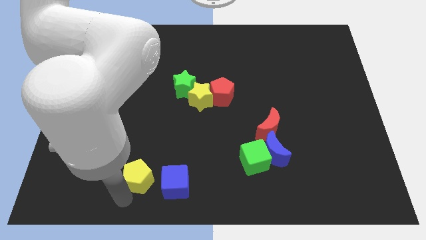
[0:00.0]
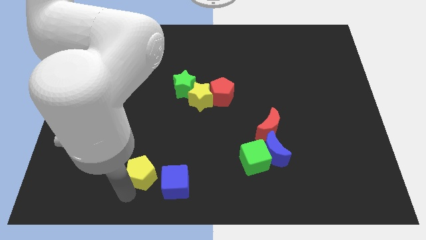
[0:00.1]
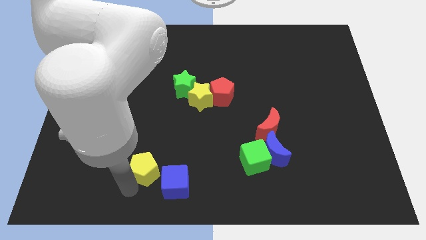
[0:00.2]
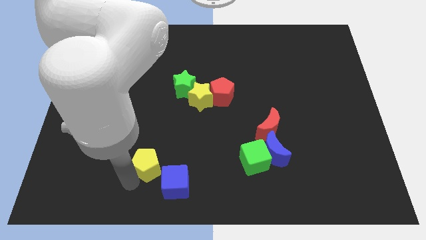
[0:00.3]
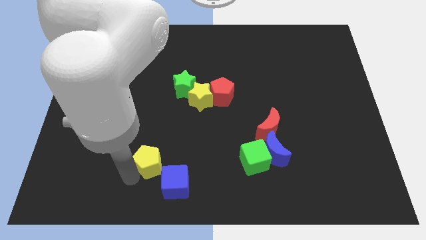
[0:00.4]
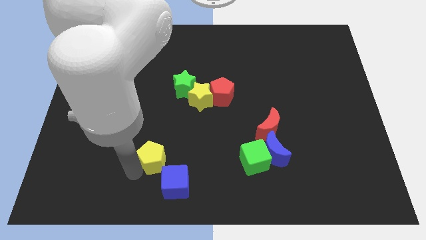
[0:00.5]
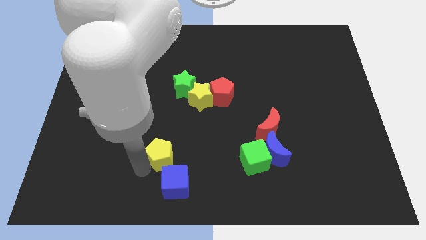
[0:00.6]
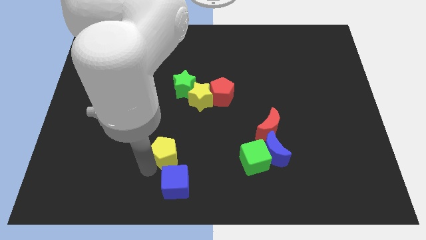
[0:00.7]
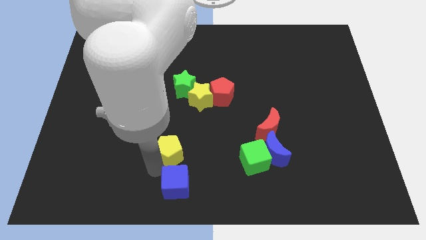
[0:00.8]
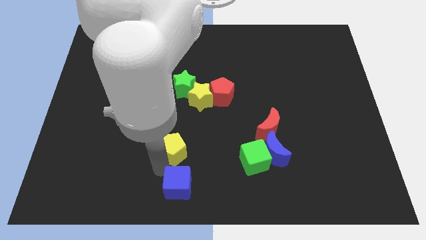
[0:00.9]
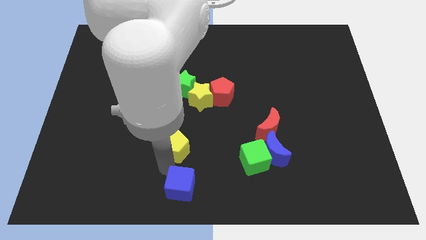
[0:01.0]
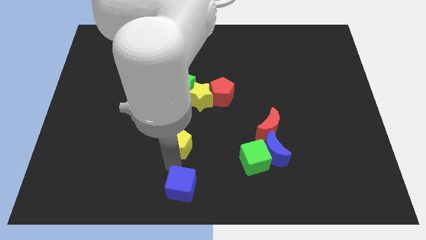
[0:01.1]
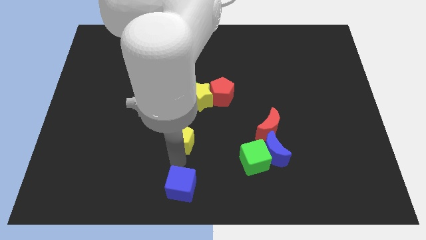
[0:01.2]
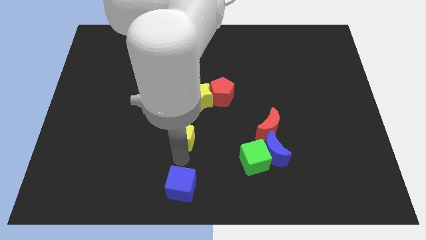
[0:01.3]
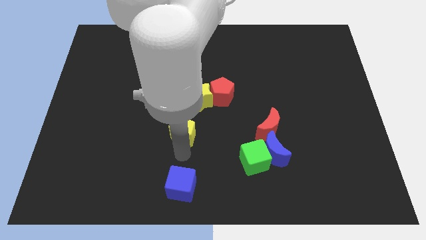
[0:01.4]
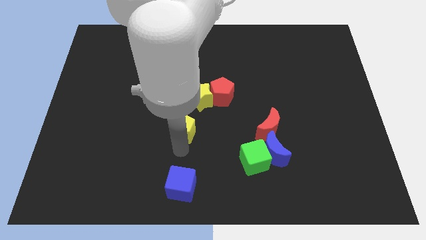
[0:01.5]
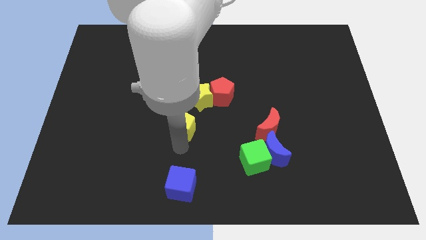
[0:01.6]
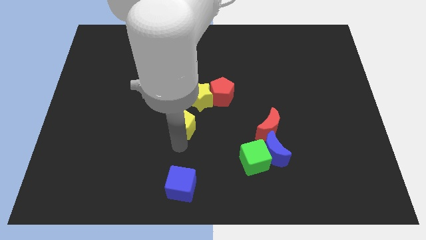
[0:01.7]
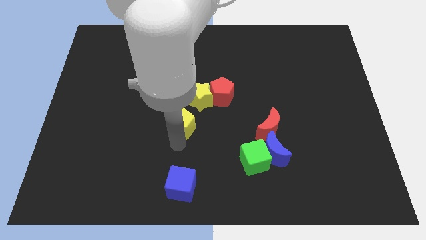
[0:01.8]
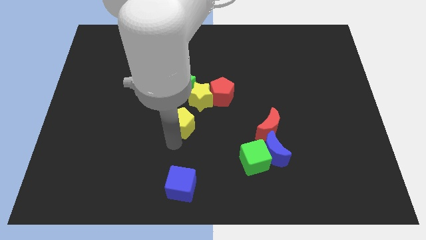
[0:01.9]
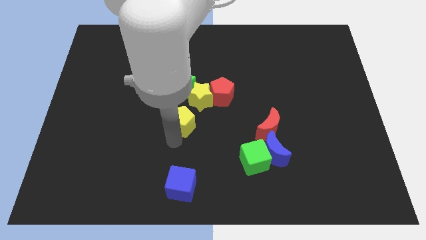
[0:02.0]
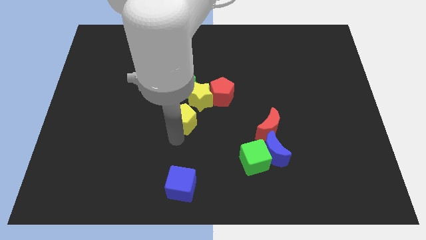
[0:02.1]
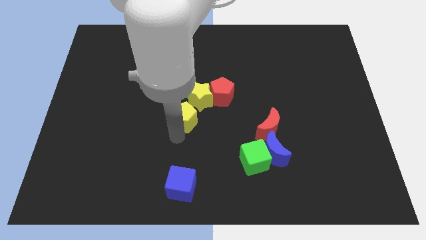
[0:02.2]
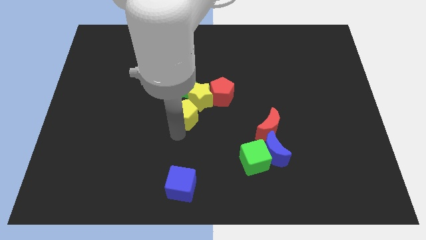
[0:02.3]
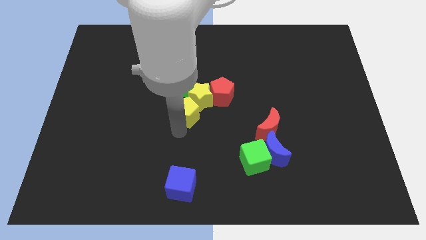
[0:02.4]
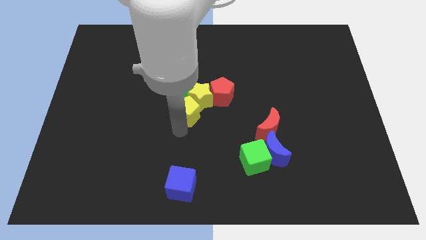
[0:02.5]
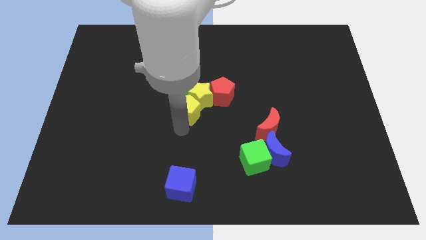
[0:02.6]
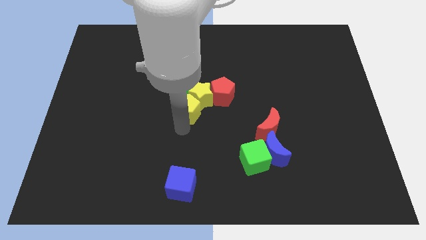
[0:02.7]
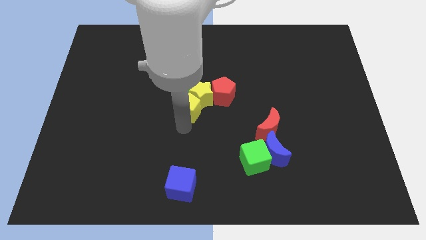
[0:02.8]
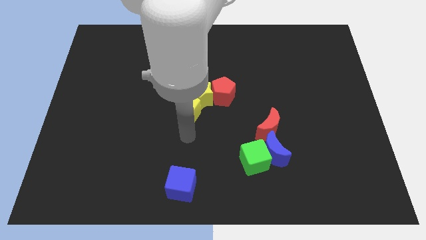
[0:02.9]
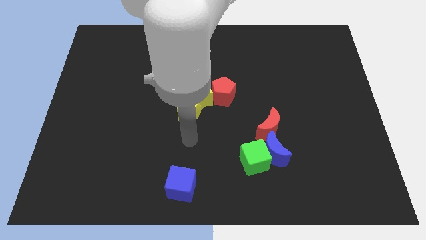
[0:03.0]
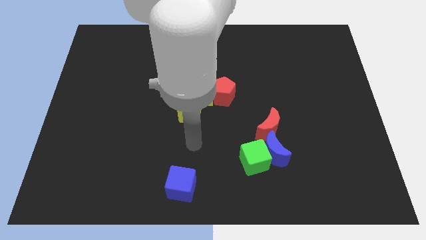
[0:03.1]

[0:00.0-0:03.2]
move the yellow pentagon below to the yellow star

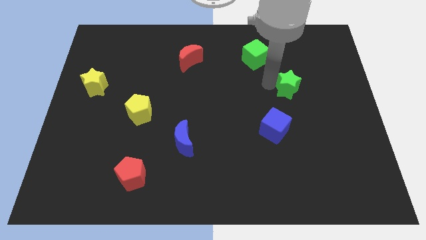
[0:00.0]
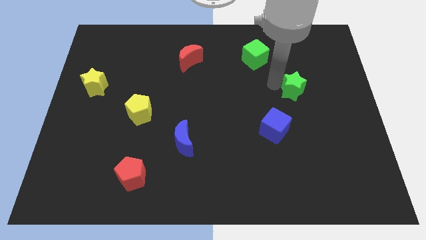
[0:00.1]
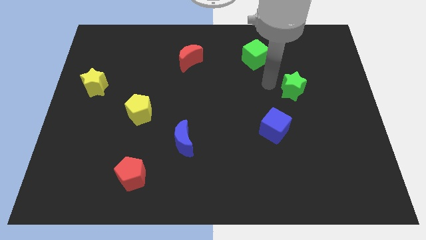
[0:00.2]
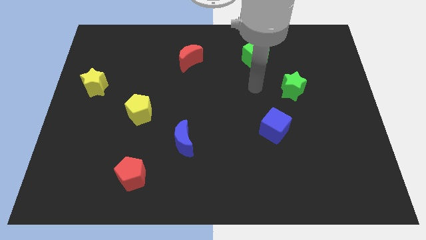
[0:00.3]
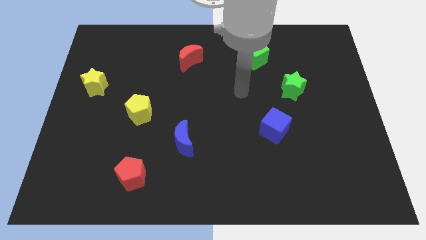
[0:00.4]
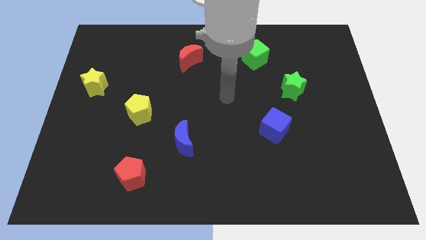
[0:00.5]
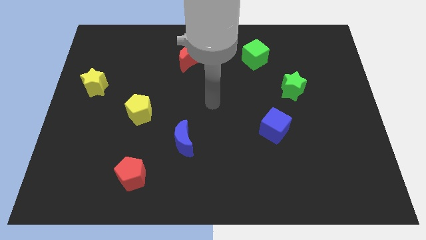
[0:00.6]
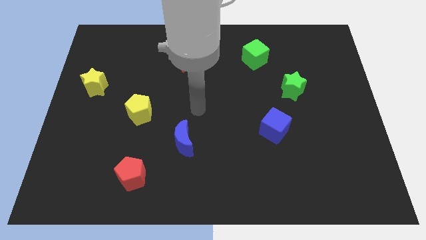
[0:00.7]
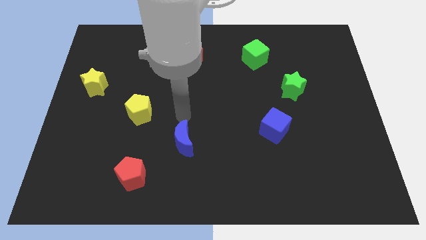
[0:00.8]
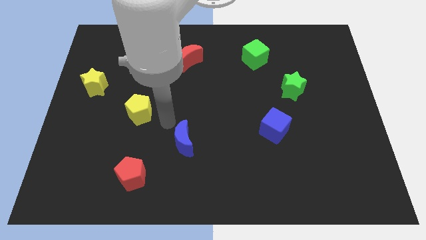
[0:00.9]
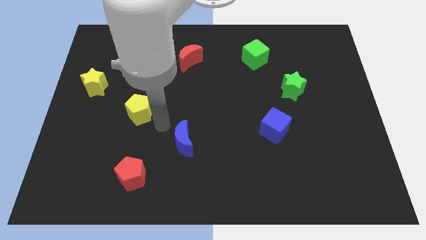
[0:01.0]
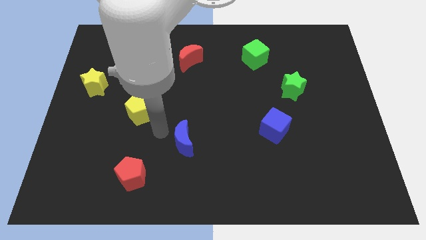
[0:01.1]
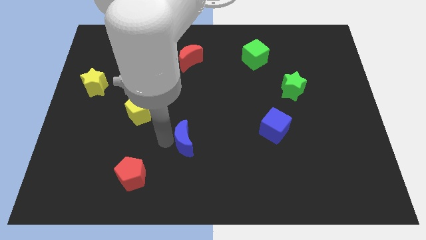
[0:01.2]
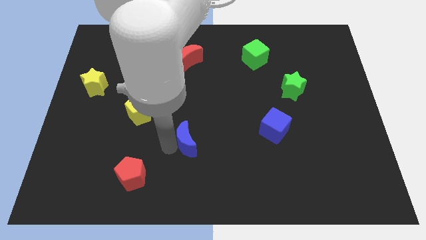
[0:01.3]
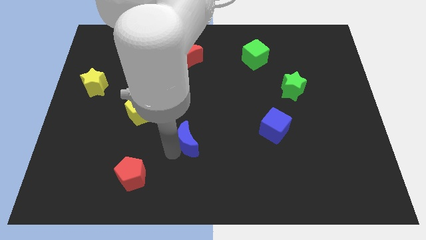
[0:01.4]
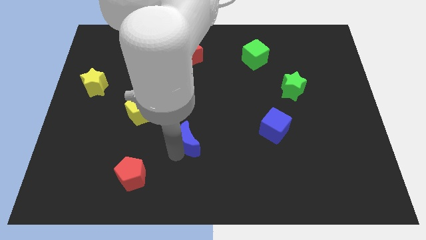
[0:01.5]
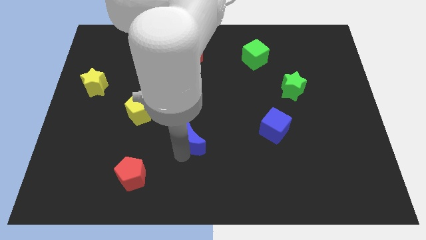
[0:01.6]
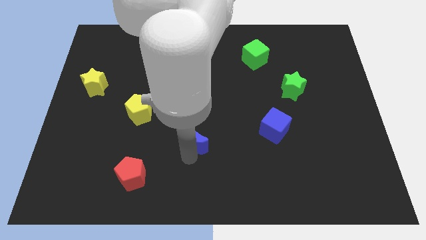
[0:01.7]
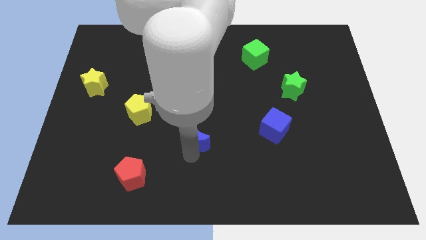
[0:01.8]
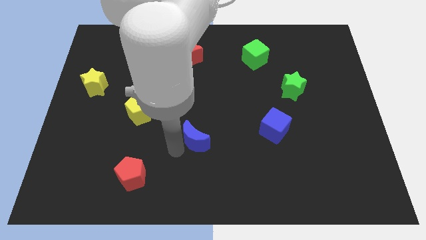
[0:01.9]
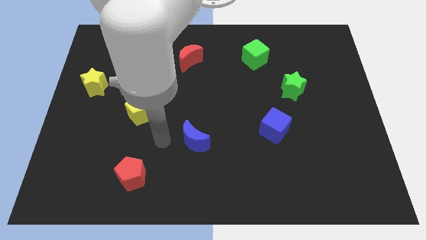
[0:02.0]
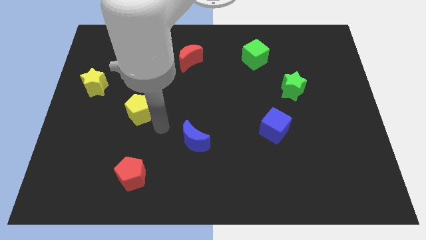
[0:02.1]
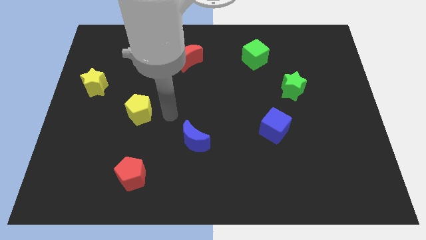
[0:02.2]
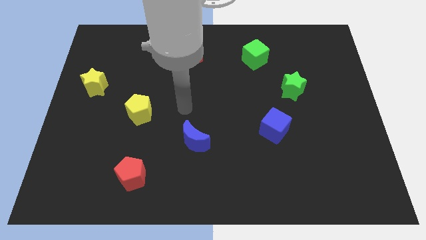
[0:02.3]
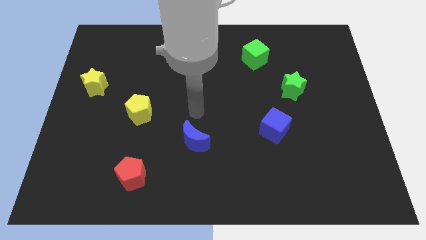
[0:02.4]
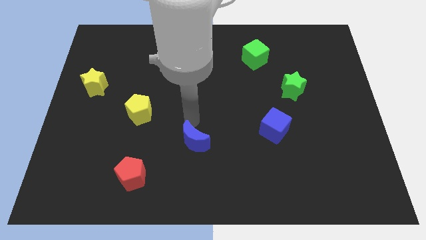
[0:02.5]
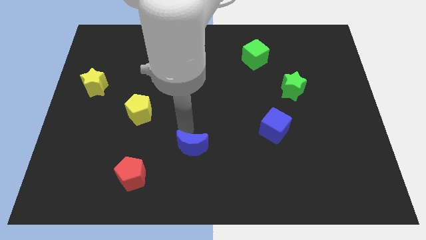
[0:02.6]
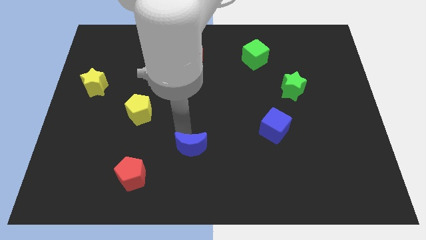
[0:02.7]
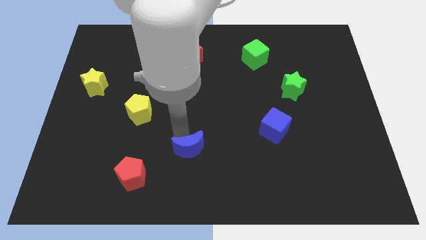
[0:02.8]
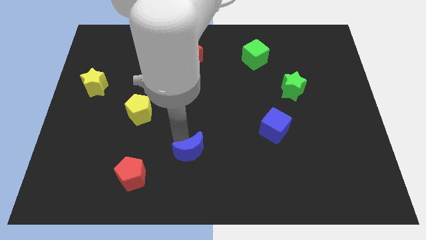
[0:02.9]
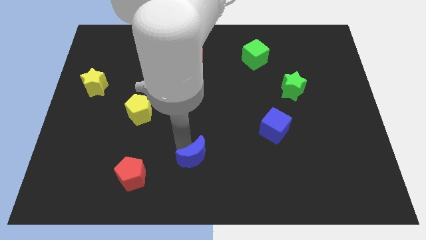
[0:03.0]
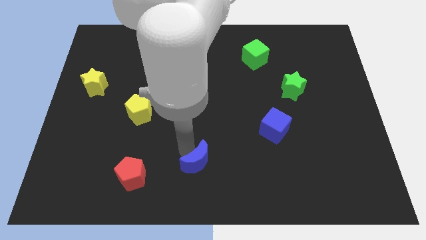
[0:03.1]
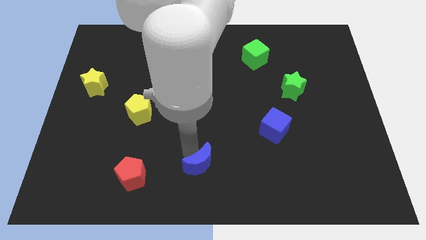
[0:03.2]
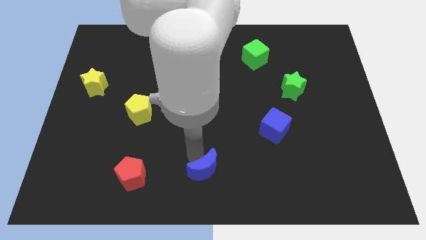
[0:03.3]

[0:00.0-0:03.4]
place the blue moon in between the blue cube and red pentagon

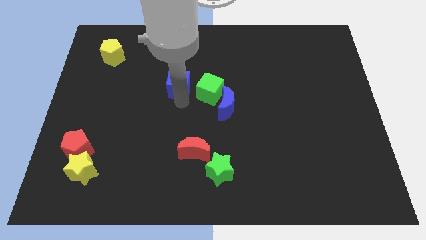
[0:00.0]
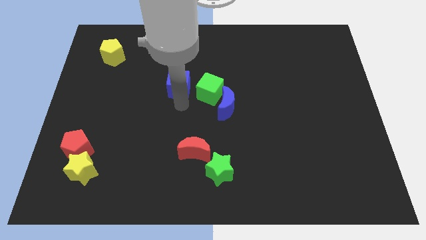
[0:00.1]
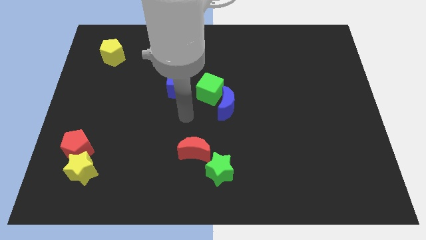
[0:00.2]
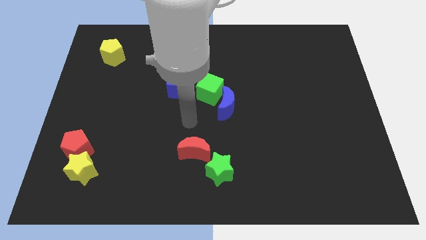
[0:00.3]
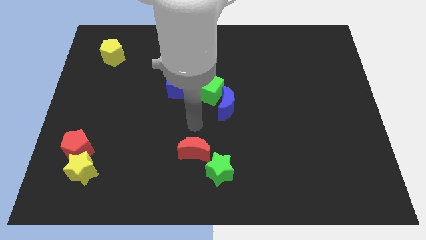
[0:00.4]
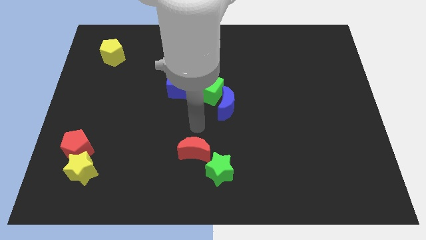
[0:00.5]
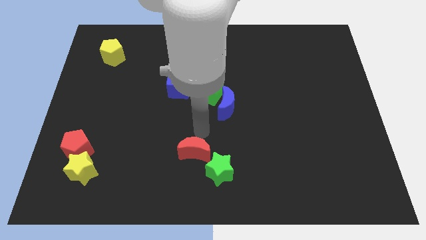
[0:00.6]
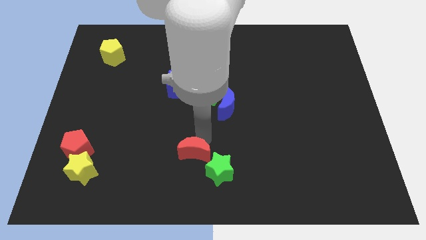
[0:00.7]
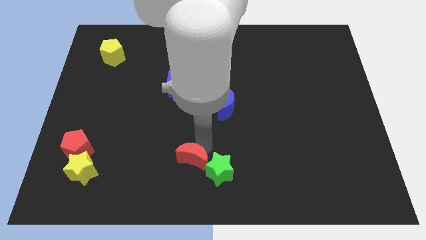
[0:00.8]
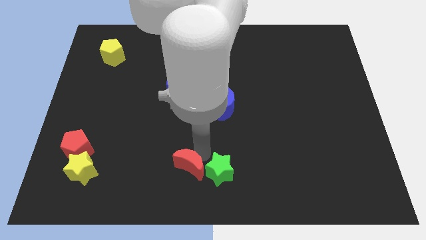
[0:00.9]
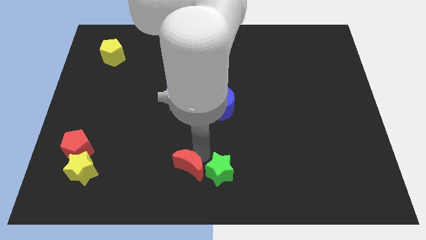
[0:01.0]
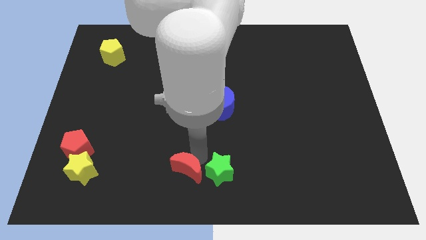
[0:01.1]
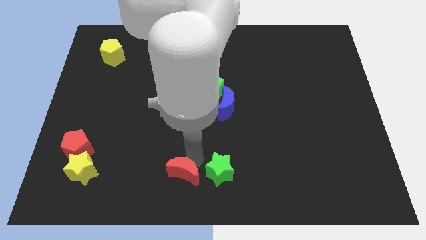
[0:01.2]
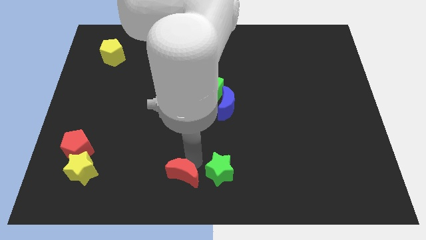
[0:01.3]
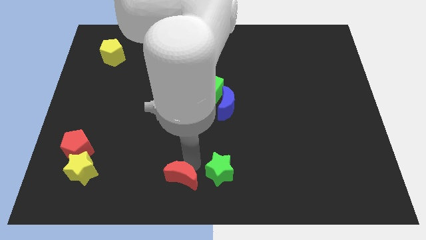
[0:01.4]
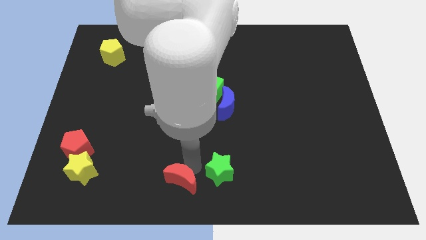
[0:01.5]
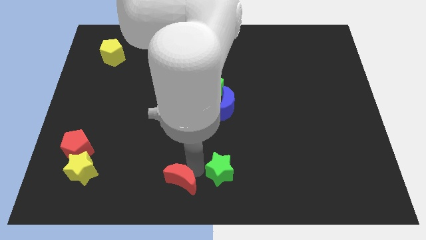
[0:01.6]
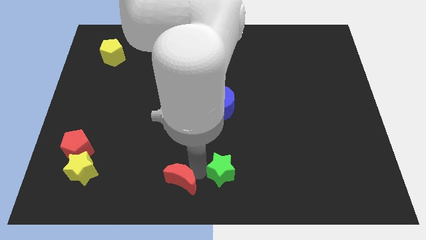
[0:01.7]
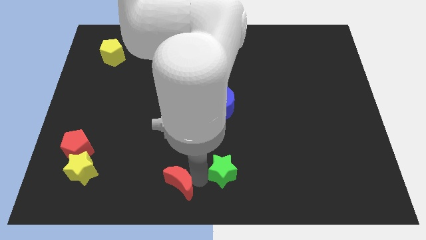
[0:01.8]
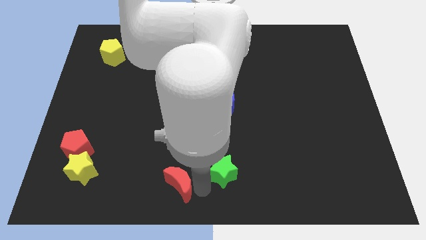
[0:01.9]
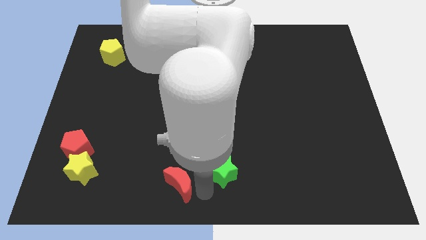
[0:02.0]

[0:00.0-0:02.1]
move the red moon diagonally to the green star

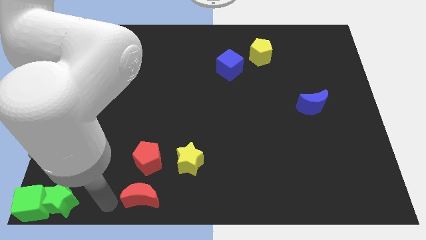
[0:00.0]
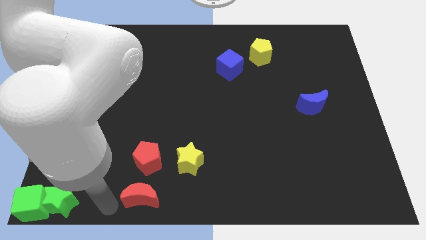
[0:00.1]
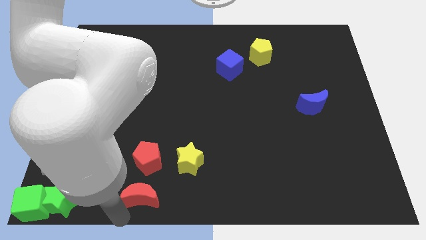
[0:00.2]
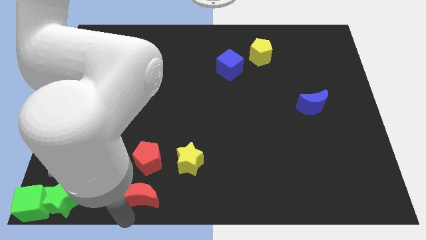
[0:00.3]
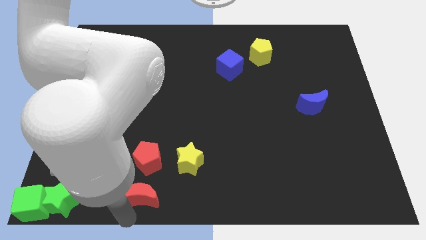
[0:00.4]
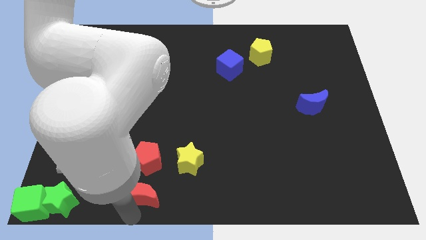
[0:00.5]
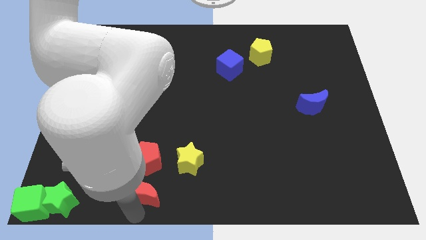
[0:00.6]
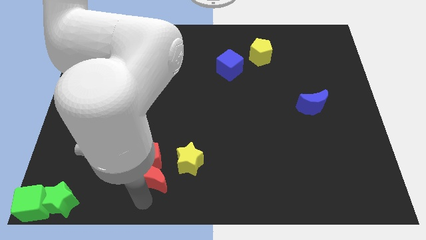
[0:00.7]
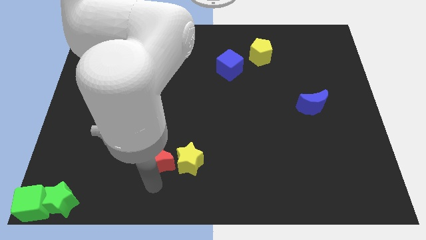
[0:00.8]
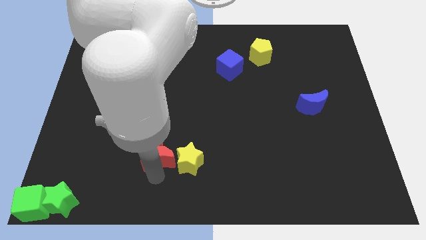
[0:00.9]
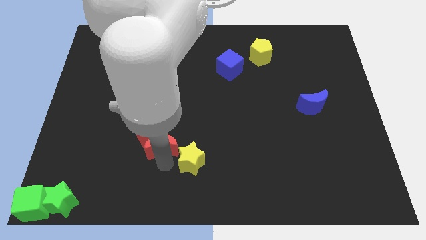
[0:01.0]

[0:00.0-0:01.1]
push red crescent into red pentagon
